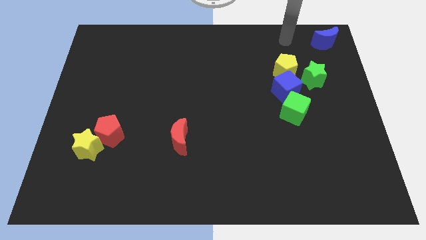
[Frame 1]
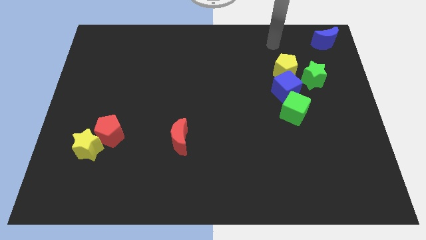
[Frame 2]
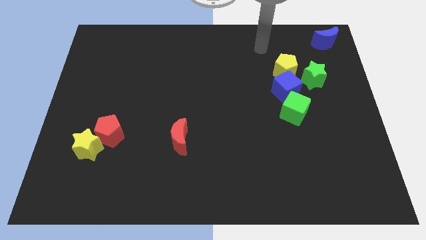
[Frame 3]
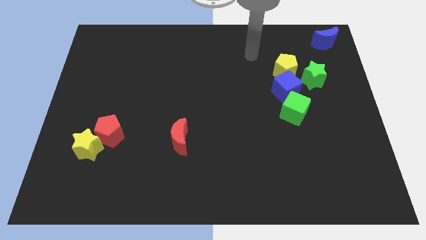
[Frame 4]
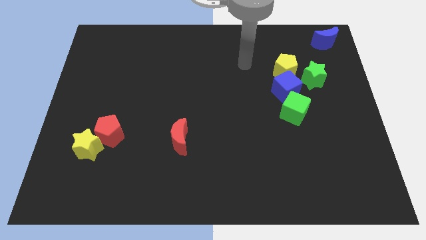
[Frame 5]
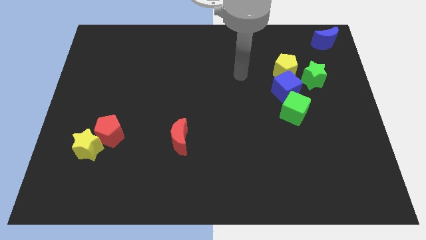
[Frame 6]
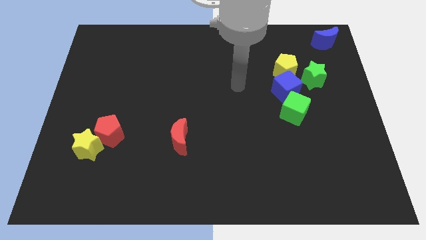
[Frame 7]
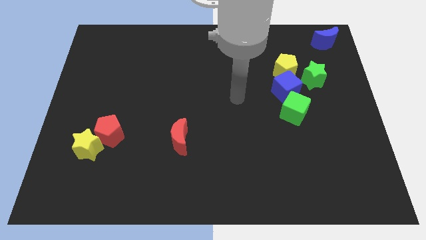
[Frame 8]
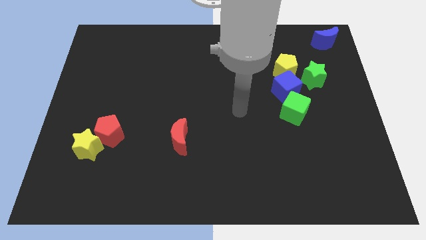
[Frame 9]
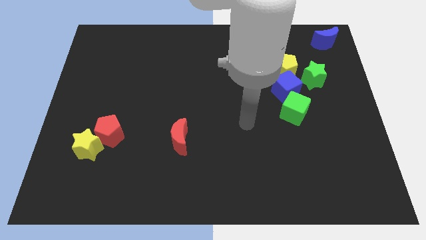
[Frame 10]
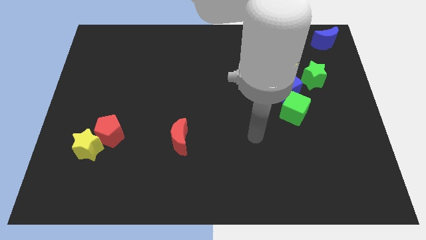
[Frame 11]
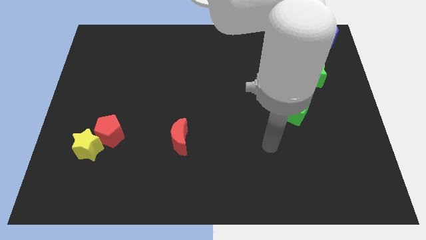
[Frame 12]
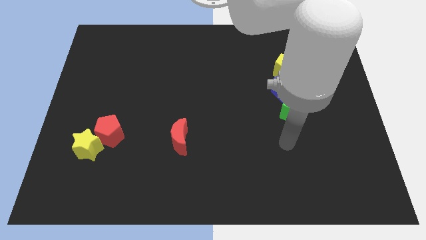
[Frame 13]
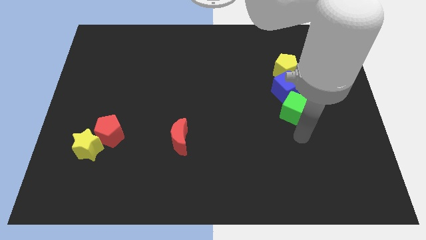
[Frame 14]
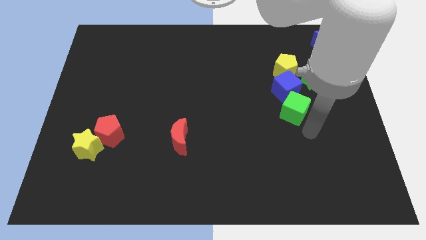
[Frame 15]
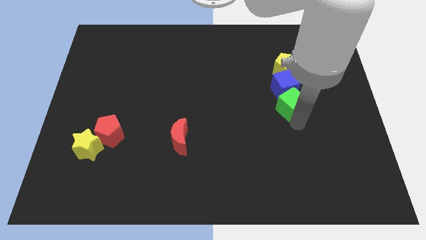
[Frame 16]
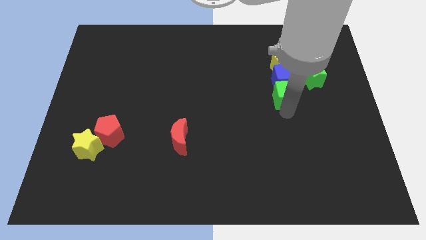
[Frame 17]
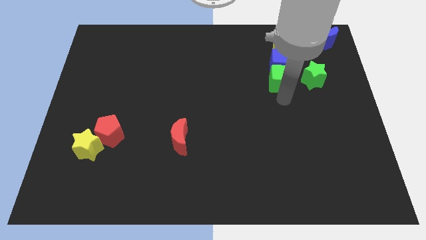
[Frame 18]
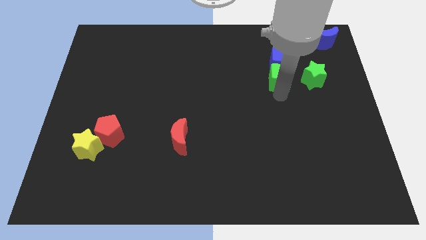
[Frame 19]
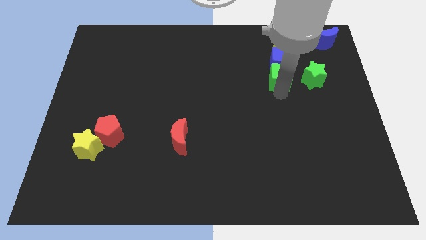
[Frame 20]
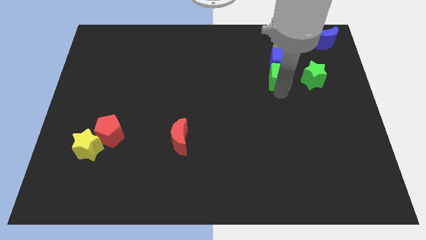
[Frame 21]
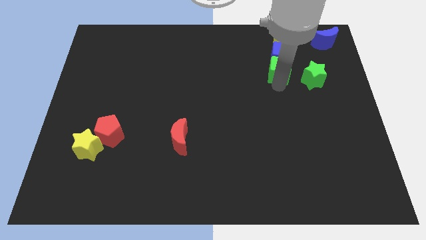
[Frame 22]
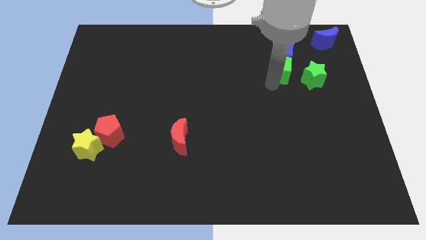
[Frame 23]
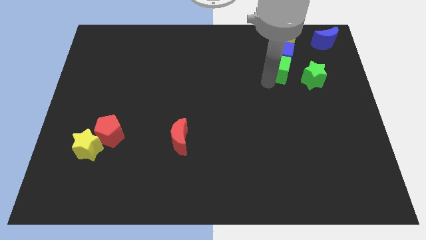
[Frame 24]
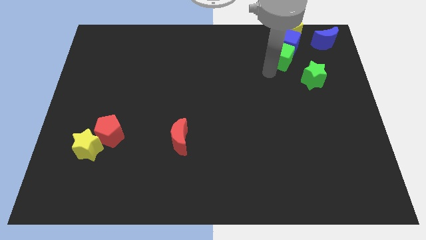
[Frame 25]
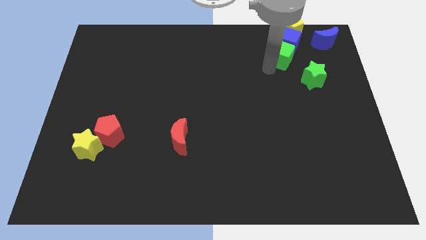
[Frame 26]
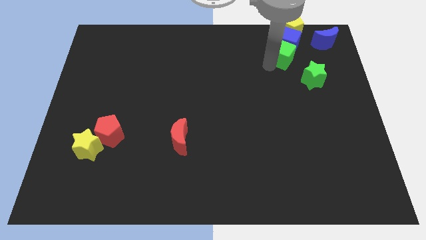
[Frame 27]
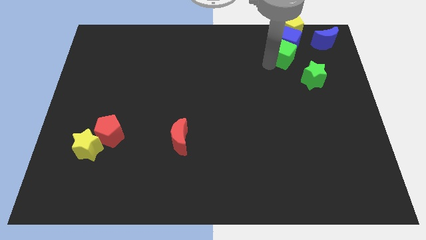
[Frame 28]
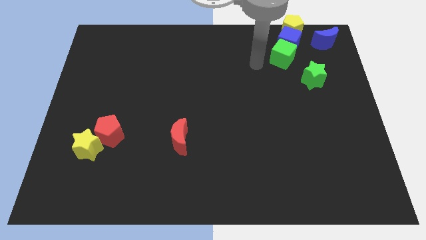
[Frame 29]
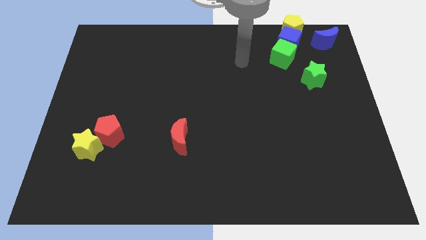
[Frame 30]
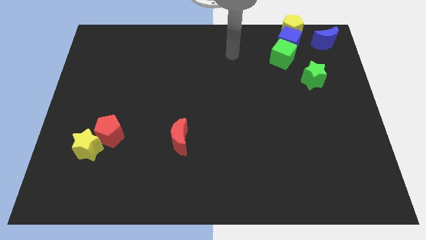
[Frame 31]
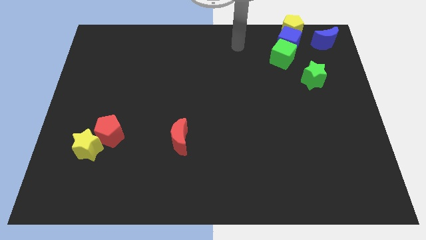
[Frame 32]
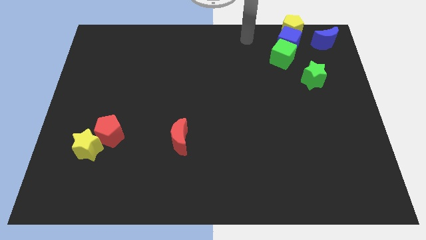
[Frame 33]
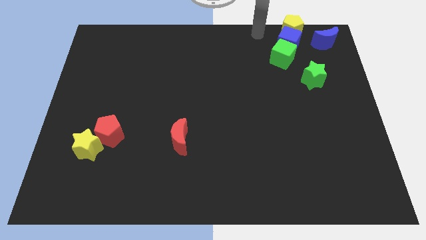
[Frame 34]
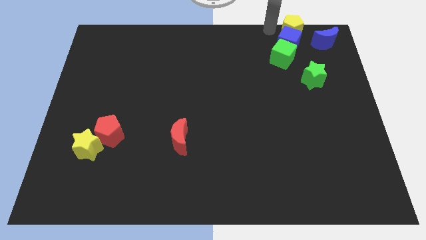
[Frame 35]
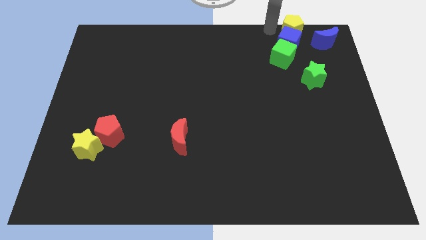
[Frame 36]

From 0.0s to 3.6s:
push the green cube to the left of the blue crescent along with the blue cube and yellow pentagon

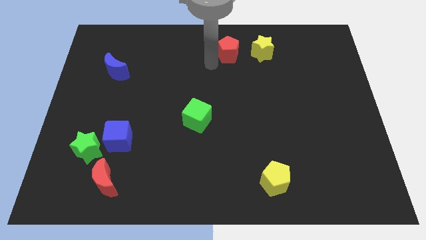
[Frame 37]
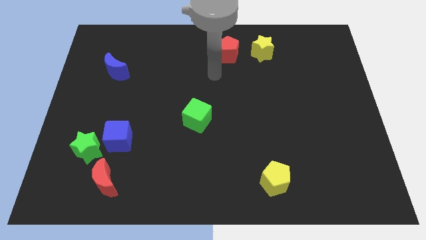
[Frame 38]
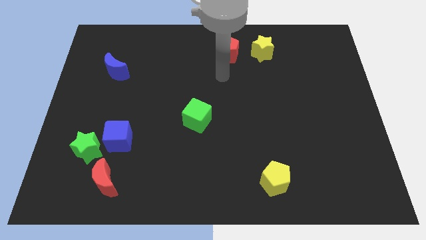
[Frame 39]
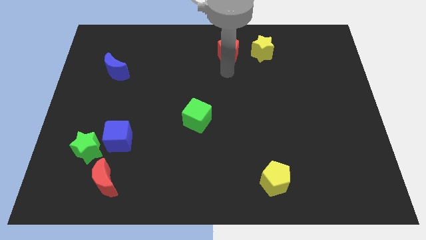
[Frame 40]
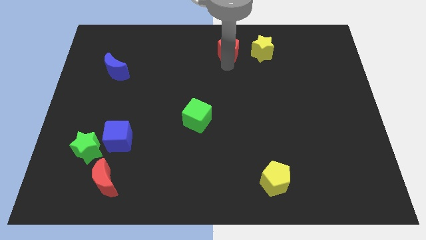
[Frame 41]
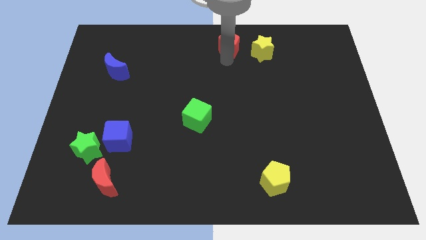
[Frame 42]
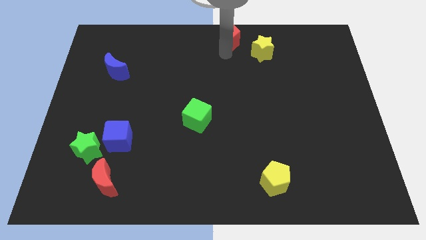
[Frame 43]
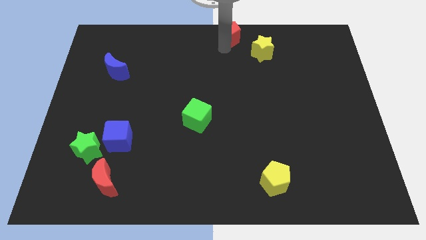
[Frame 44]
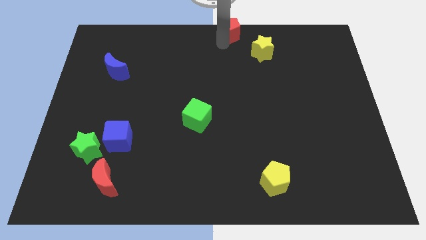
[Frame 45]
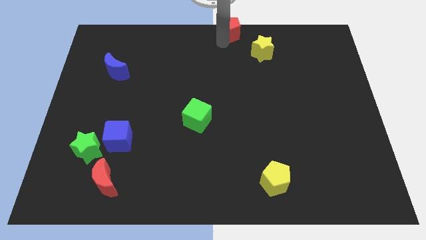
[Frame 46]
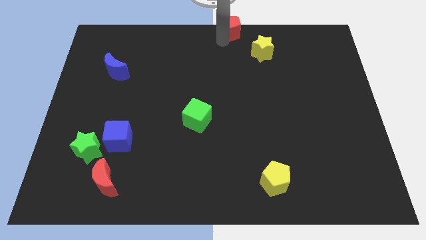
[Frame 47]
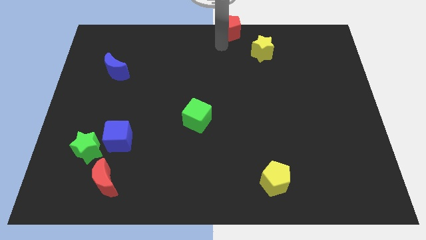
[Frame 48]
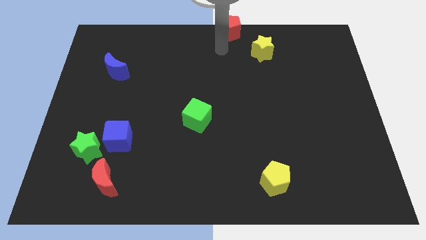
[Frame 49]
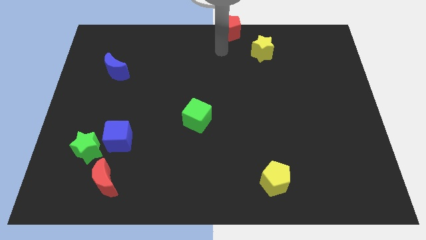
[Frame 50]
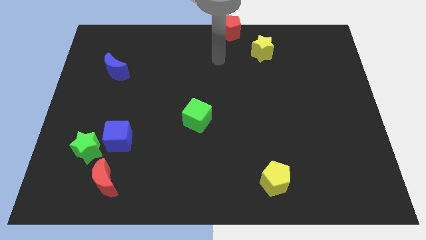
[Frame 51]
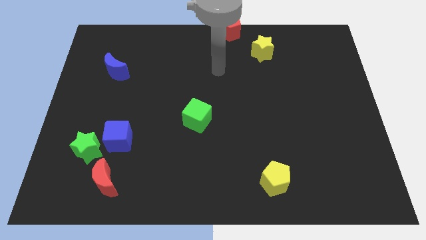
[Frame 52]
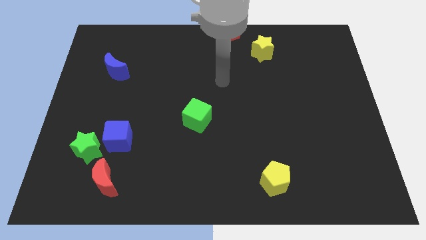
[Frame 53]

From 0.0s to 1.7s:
move the red pentagon to the top middle

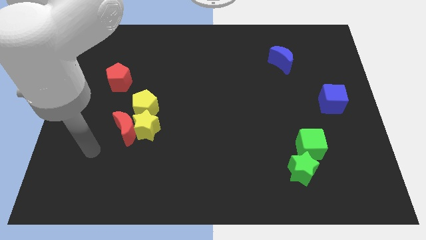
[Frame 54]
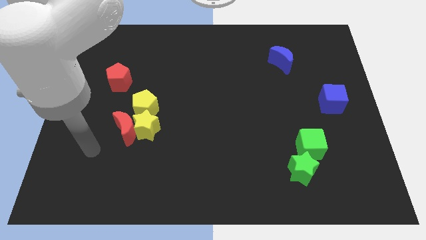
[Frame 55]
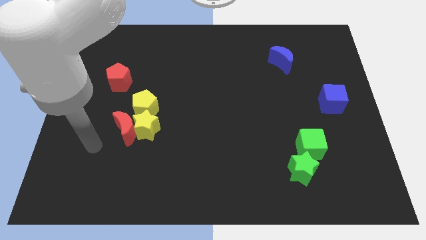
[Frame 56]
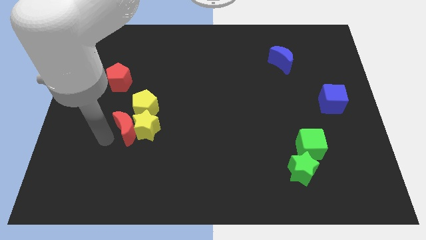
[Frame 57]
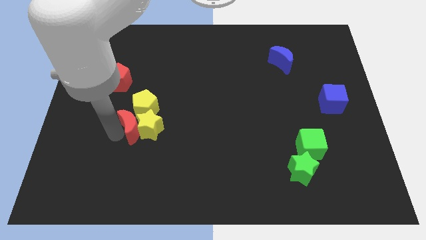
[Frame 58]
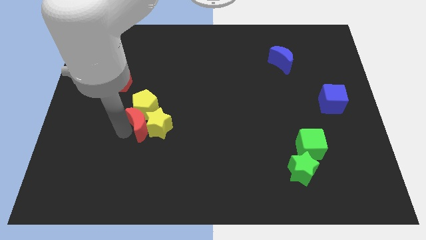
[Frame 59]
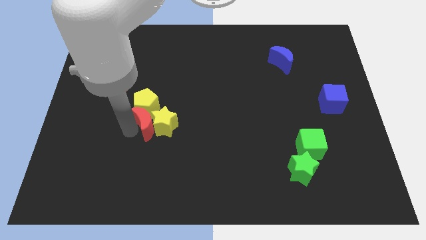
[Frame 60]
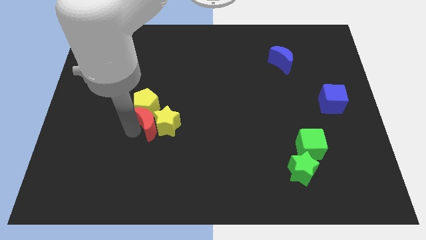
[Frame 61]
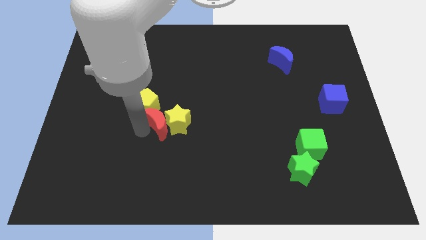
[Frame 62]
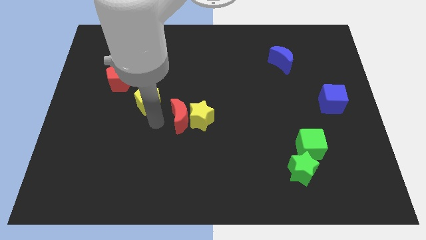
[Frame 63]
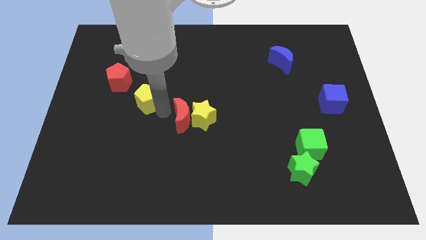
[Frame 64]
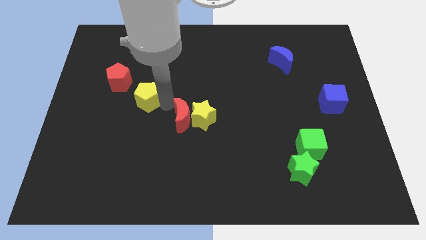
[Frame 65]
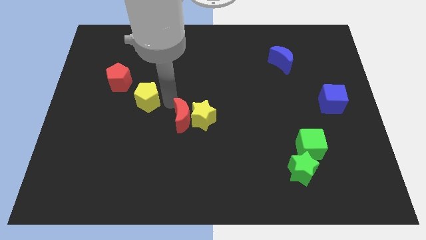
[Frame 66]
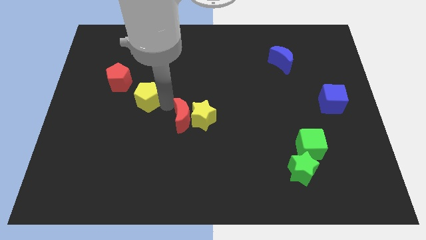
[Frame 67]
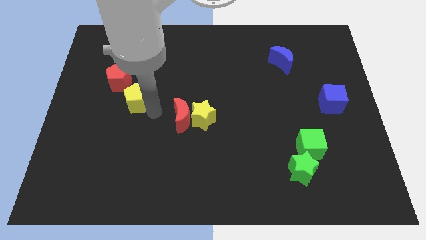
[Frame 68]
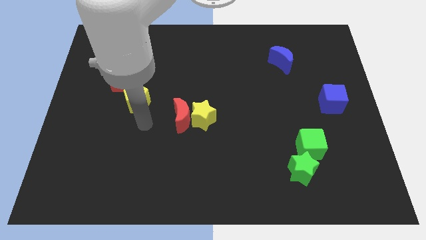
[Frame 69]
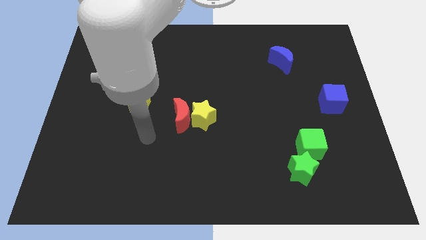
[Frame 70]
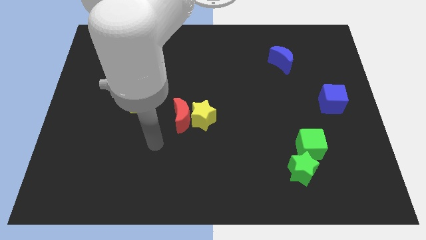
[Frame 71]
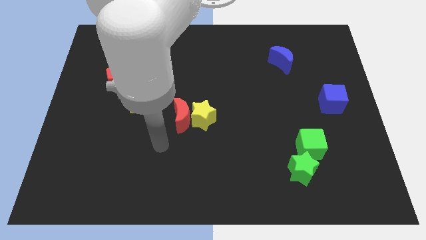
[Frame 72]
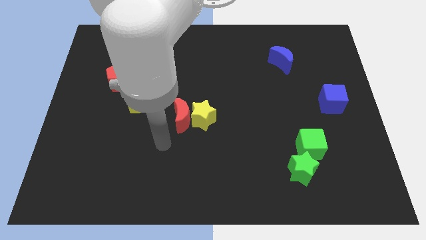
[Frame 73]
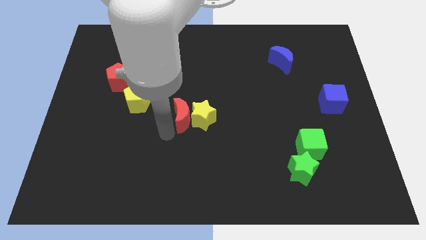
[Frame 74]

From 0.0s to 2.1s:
push the yellow star and red moon at the center of the board

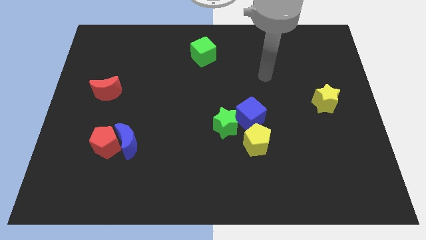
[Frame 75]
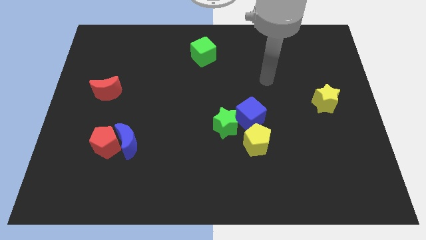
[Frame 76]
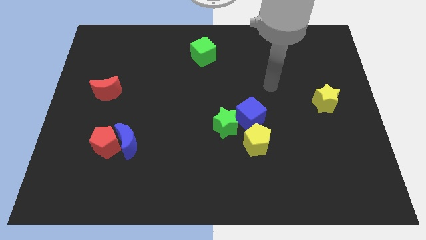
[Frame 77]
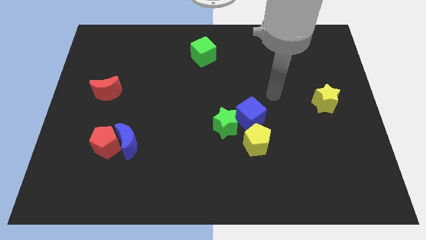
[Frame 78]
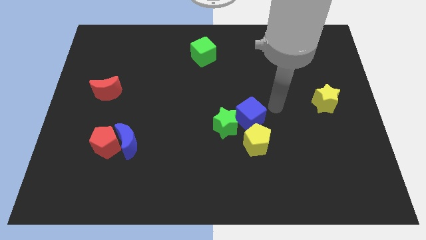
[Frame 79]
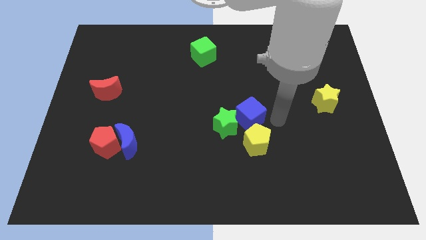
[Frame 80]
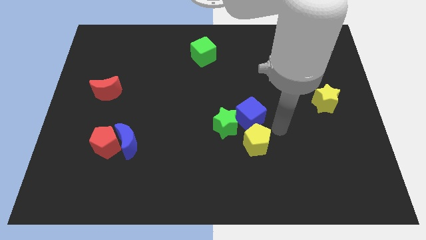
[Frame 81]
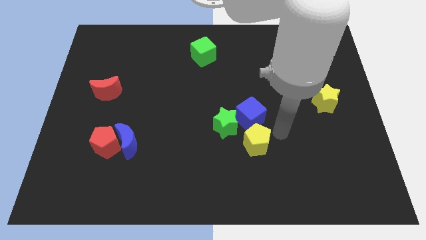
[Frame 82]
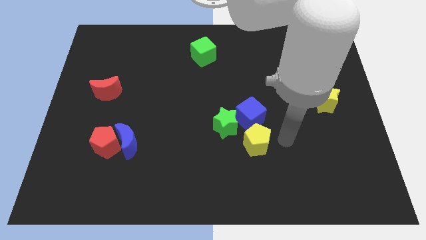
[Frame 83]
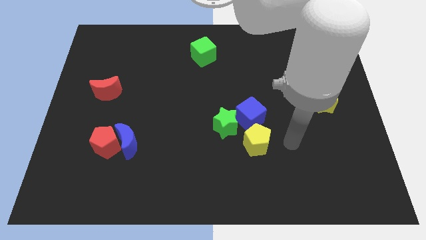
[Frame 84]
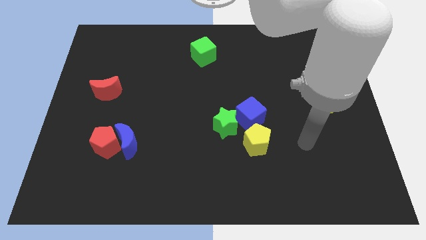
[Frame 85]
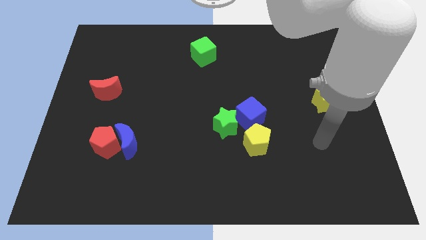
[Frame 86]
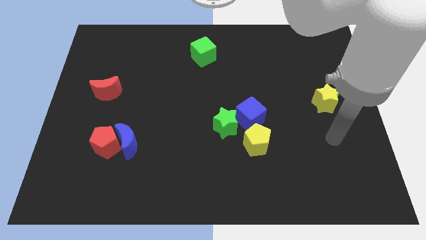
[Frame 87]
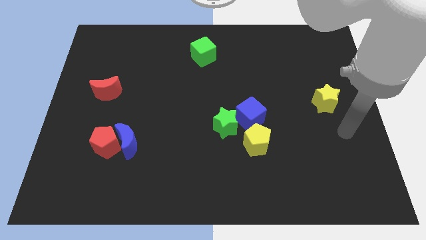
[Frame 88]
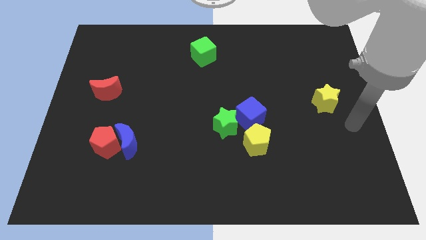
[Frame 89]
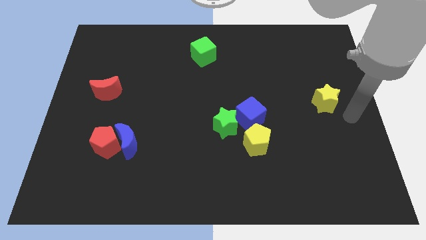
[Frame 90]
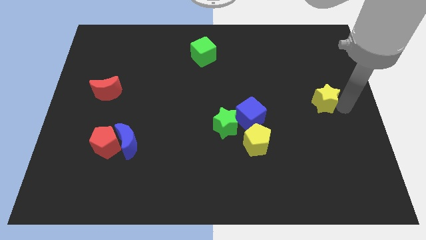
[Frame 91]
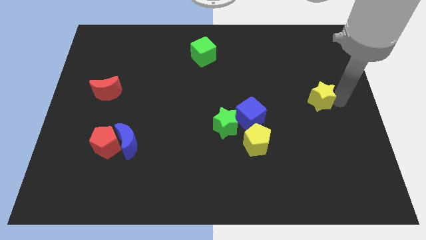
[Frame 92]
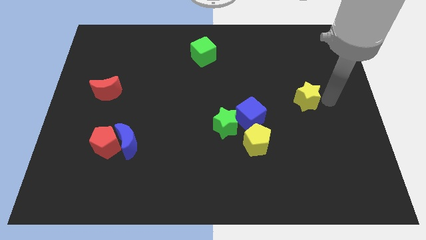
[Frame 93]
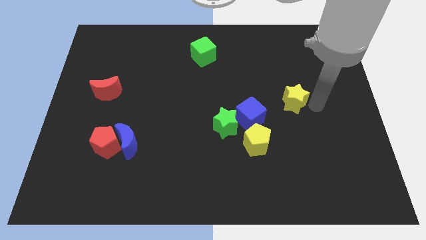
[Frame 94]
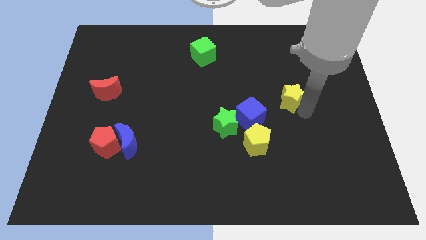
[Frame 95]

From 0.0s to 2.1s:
push the yellow star to the top of the board
